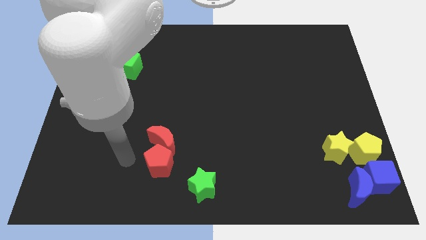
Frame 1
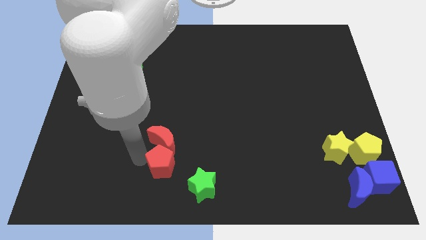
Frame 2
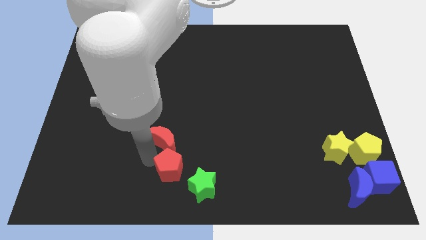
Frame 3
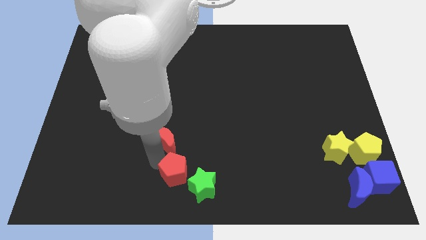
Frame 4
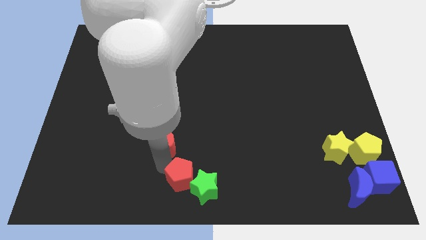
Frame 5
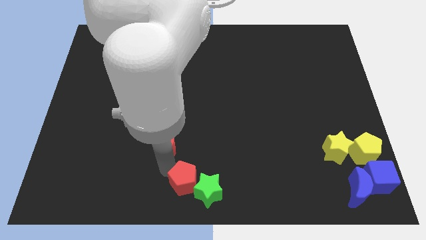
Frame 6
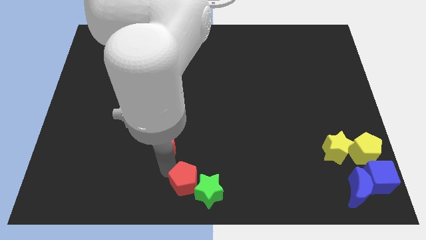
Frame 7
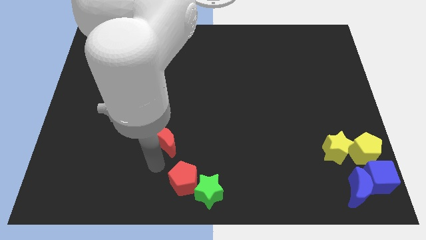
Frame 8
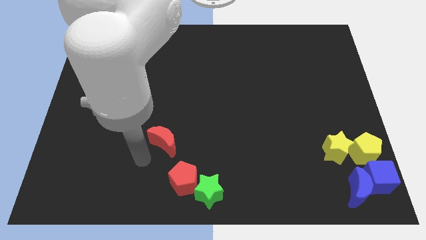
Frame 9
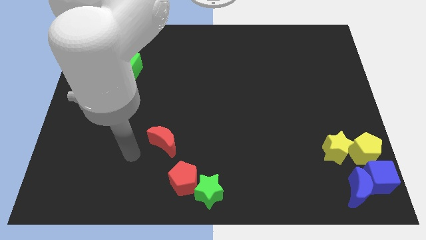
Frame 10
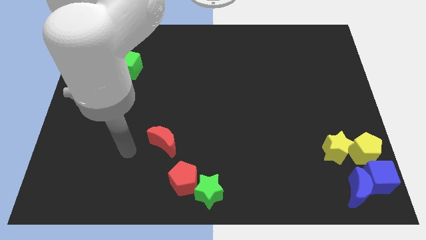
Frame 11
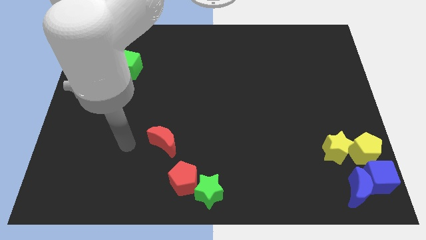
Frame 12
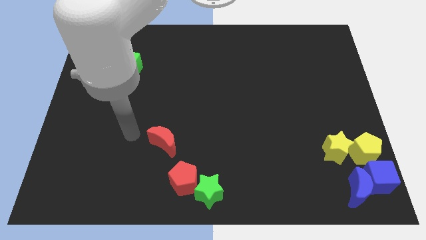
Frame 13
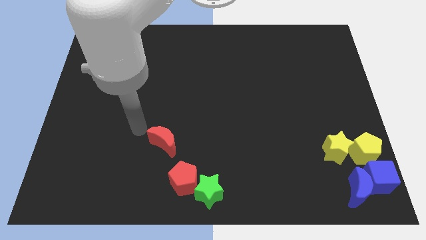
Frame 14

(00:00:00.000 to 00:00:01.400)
touch green star with red pentagon

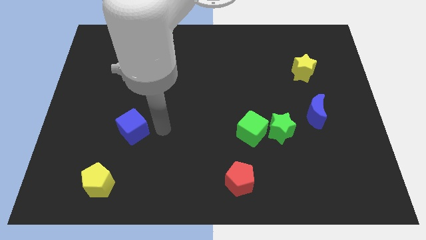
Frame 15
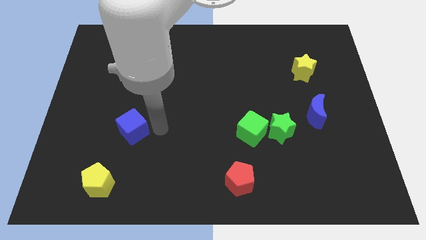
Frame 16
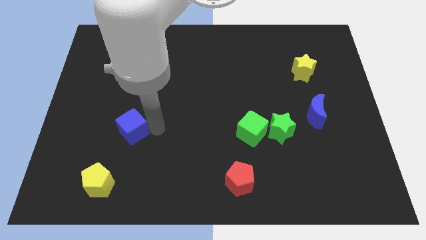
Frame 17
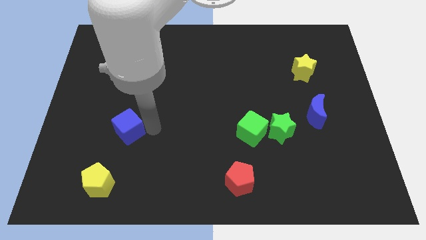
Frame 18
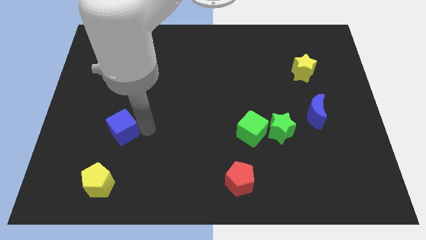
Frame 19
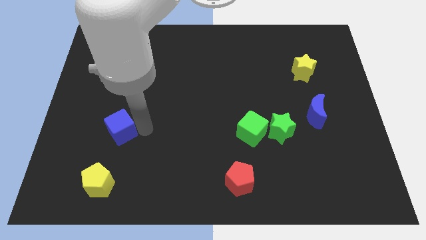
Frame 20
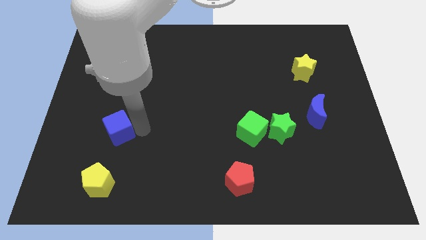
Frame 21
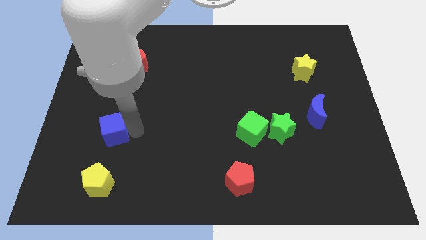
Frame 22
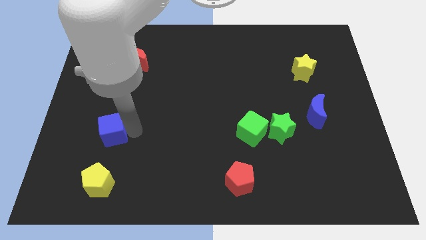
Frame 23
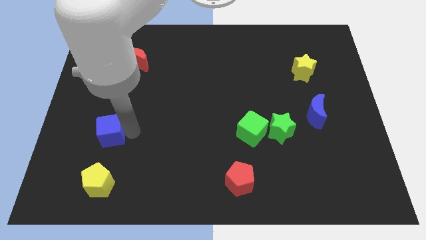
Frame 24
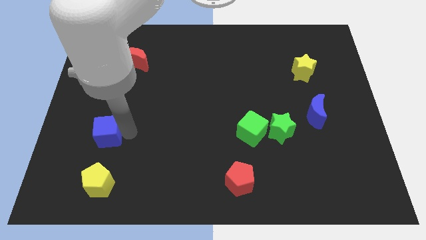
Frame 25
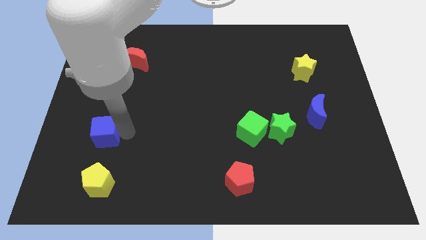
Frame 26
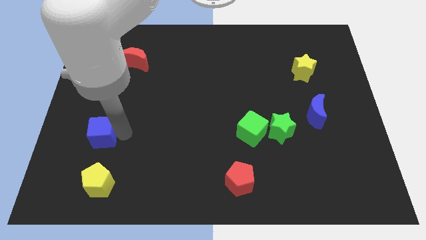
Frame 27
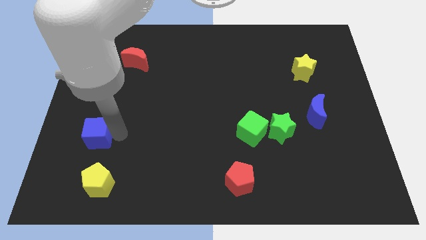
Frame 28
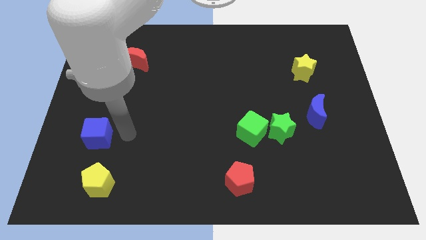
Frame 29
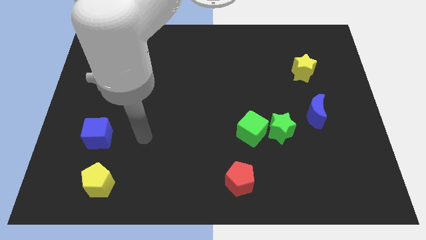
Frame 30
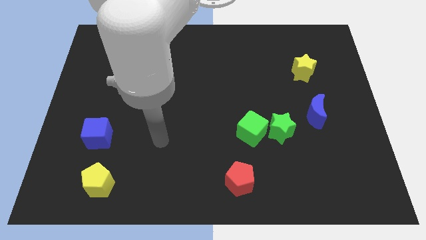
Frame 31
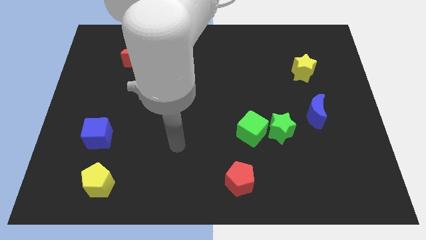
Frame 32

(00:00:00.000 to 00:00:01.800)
place the blue cube to the top side of the yellow pentagon

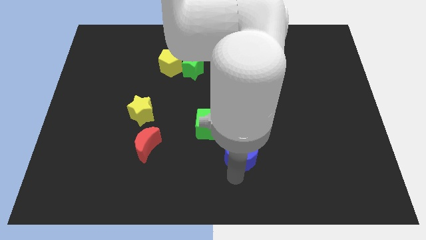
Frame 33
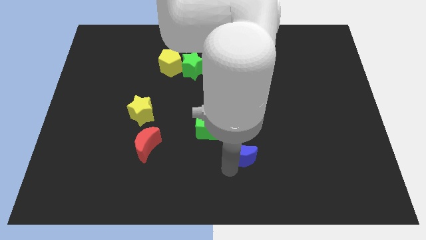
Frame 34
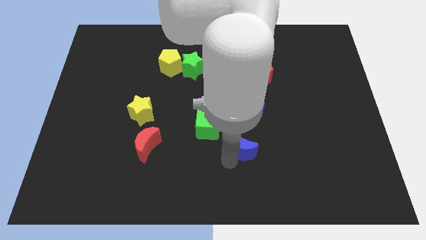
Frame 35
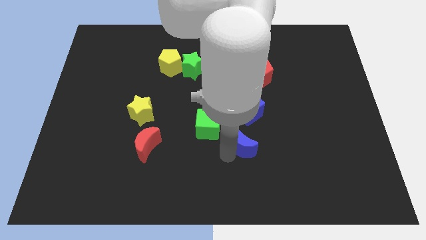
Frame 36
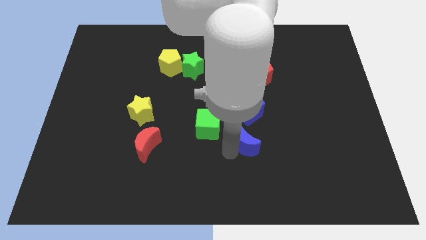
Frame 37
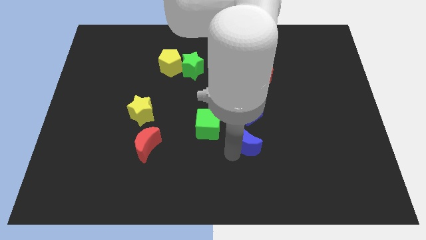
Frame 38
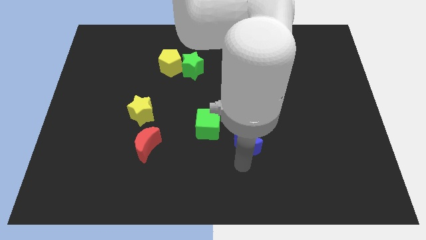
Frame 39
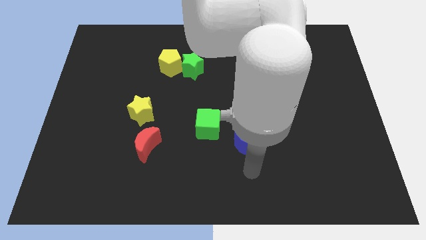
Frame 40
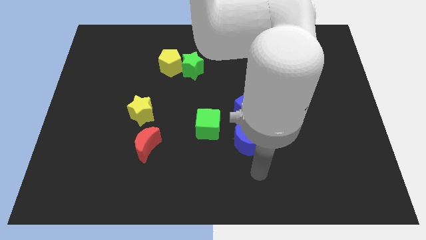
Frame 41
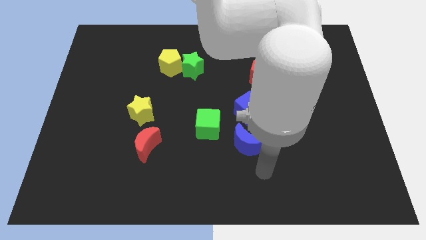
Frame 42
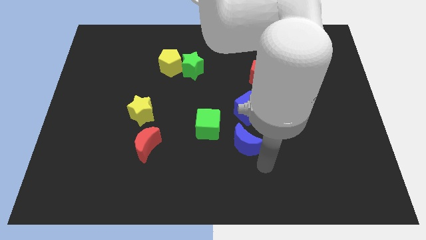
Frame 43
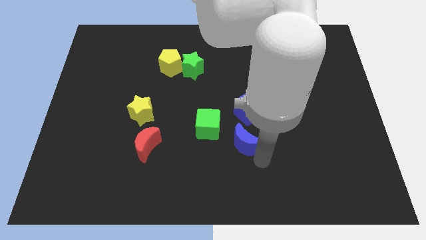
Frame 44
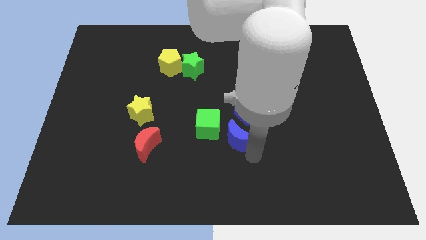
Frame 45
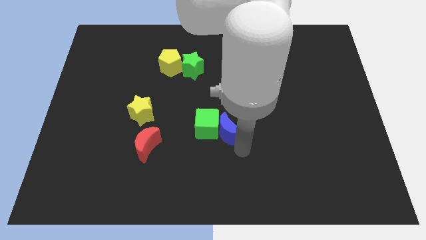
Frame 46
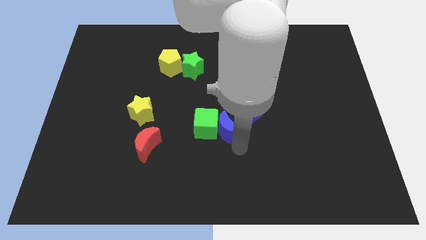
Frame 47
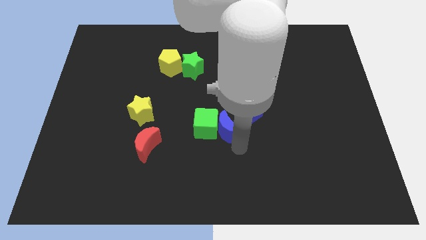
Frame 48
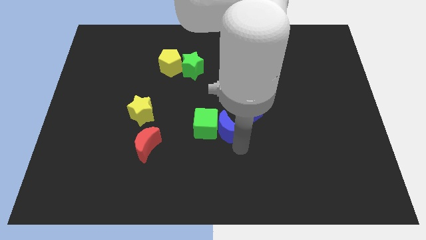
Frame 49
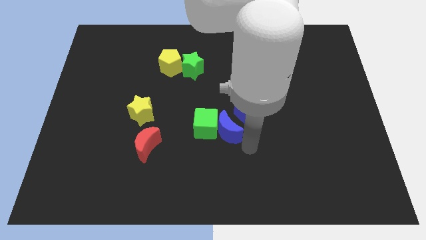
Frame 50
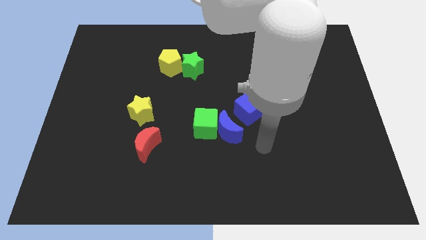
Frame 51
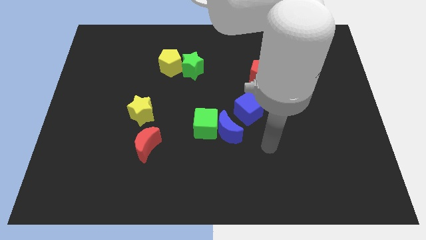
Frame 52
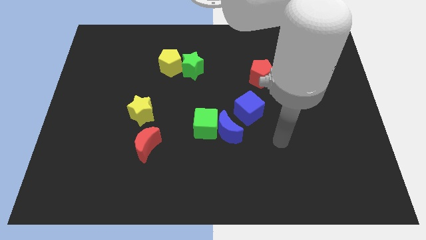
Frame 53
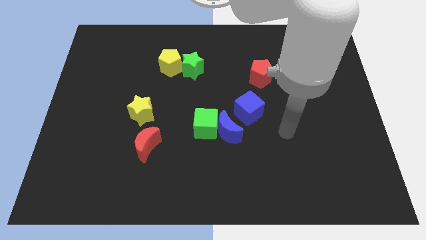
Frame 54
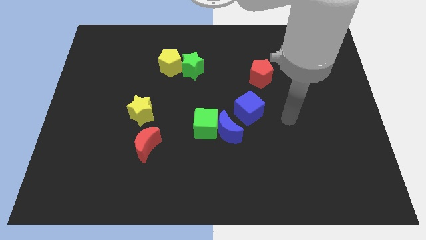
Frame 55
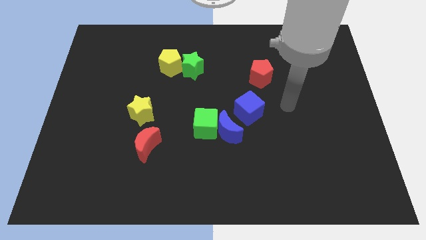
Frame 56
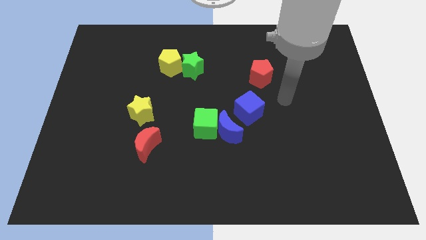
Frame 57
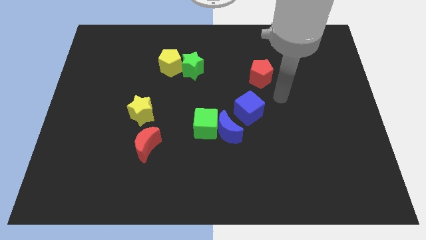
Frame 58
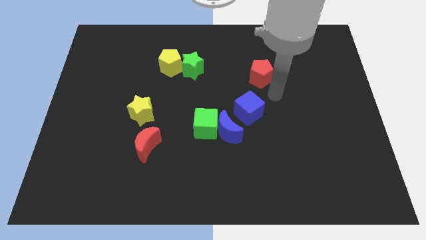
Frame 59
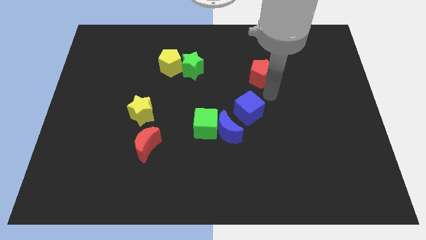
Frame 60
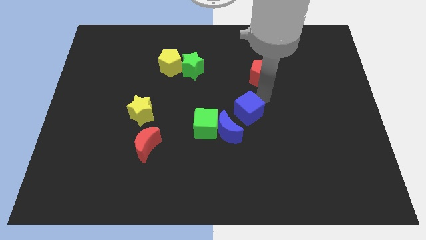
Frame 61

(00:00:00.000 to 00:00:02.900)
push the blue crescent into the green cube

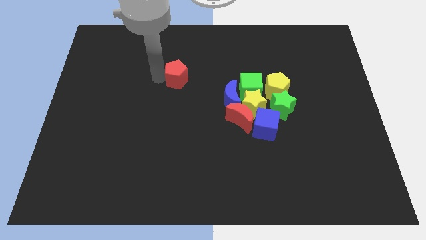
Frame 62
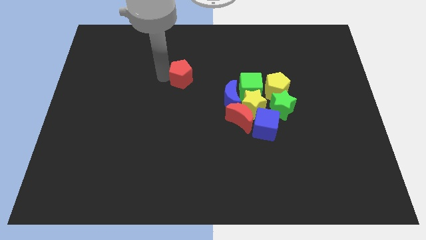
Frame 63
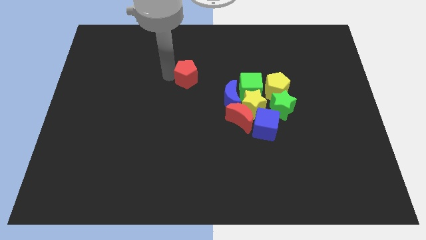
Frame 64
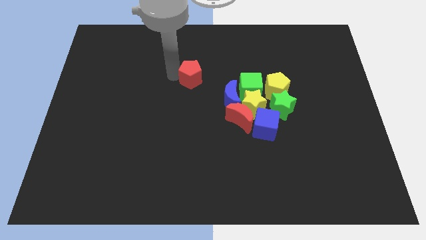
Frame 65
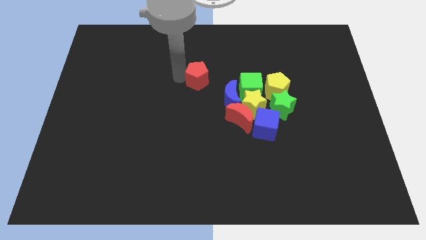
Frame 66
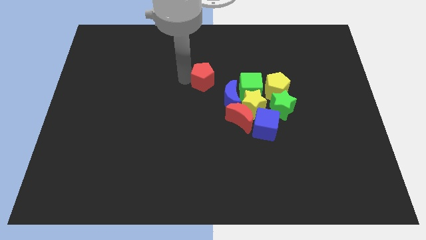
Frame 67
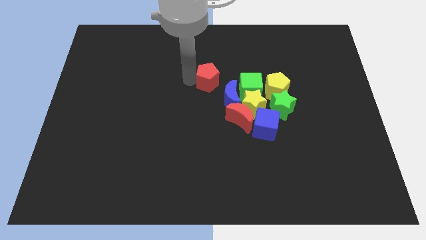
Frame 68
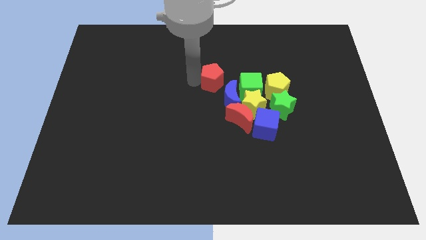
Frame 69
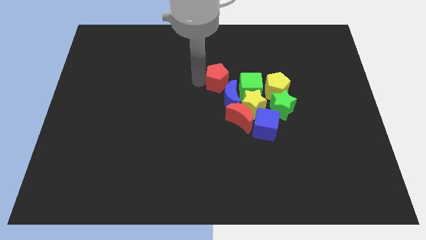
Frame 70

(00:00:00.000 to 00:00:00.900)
move red pentagon left above blue moon

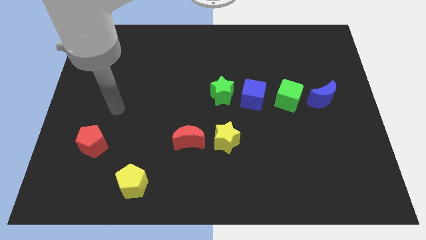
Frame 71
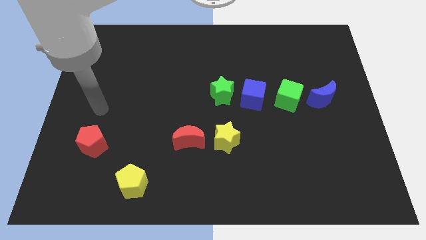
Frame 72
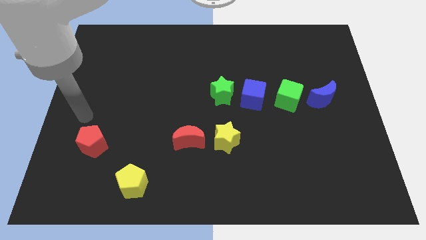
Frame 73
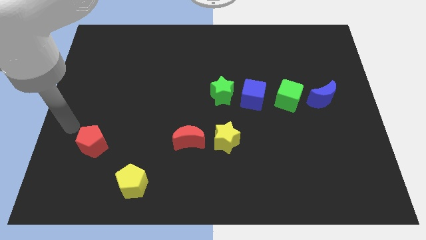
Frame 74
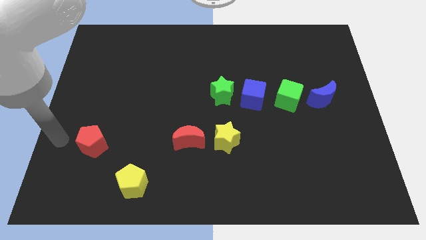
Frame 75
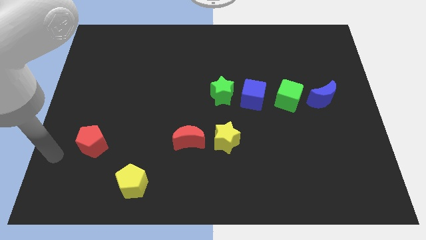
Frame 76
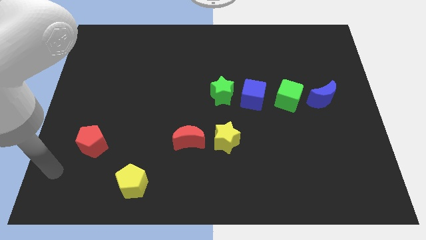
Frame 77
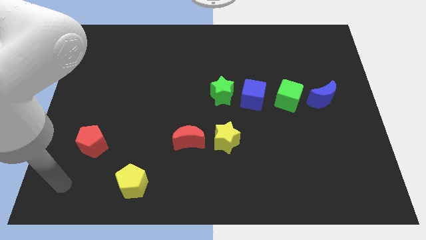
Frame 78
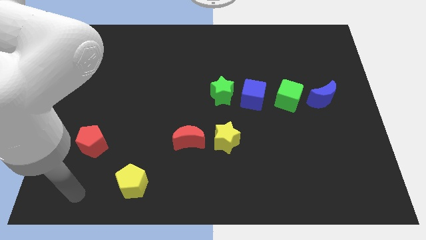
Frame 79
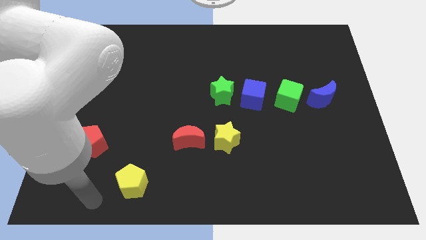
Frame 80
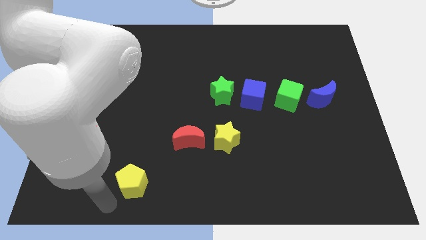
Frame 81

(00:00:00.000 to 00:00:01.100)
put arm on the bottom of yellow pentagon

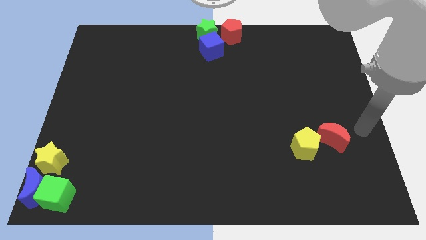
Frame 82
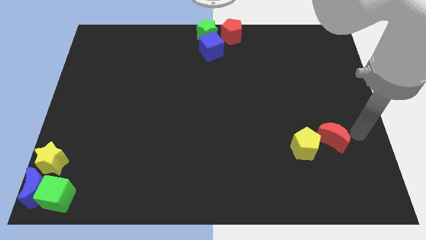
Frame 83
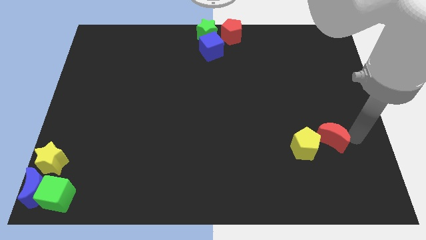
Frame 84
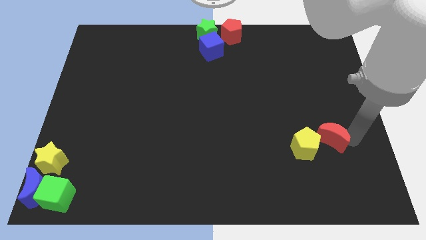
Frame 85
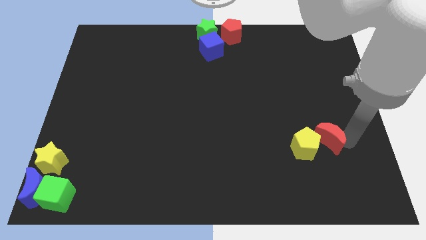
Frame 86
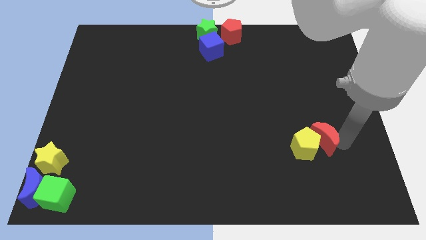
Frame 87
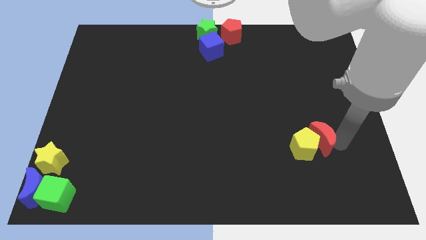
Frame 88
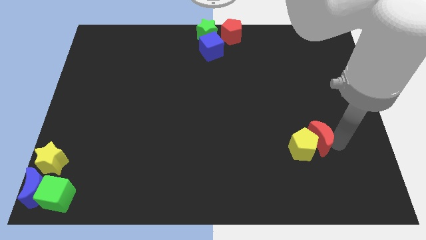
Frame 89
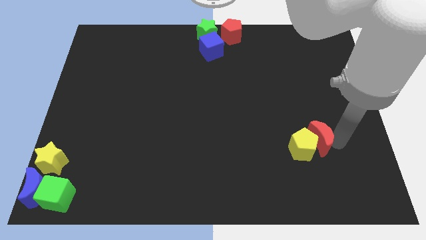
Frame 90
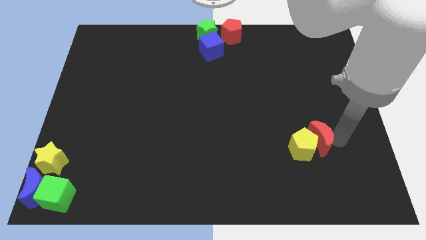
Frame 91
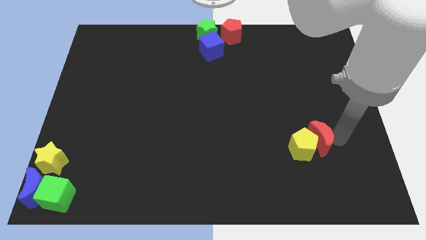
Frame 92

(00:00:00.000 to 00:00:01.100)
move the red crescent into the yellow star
